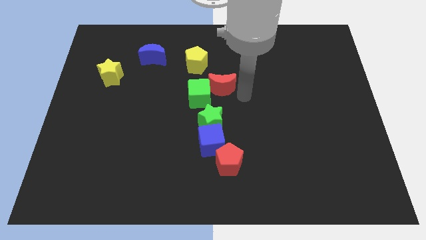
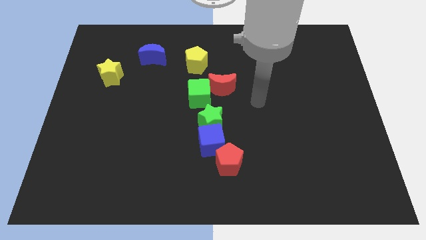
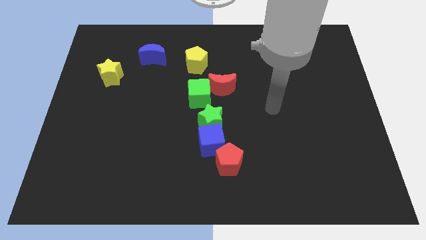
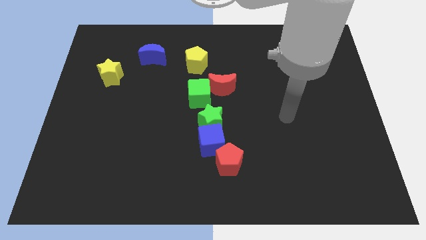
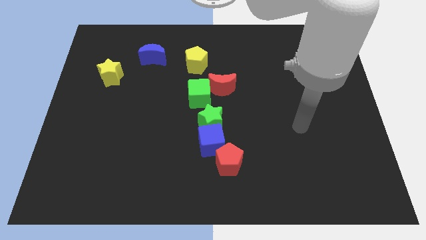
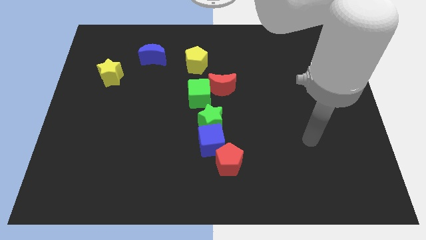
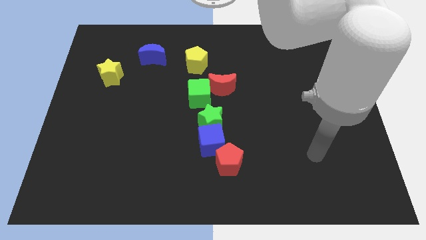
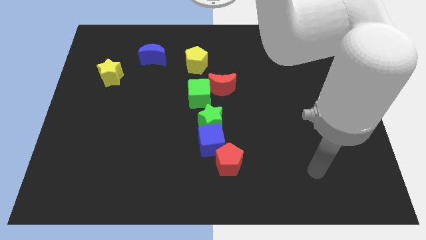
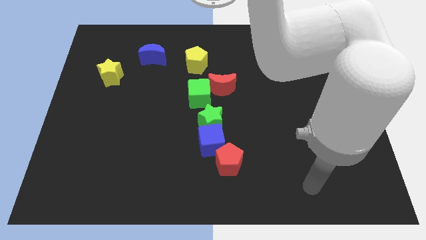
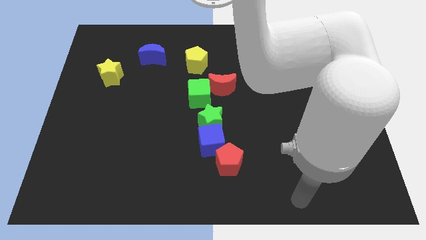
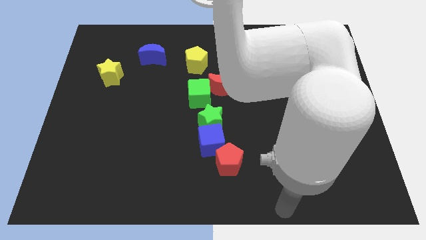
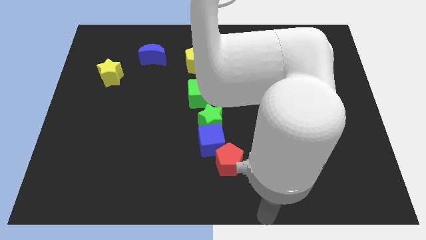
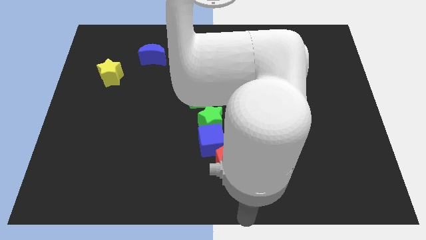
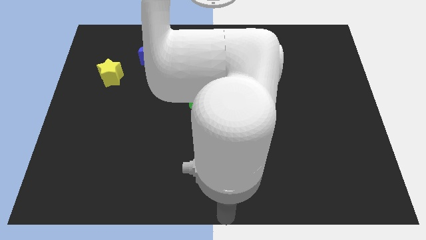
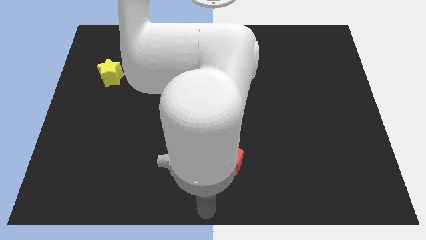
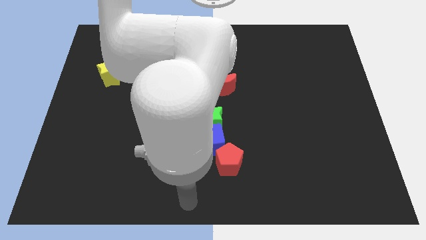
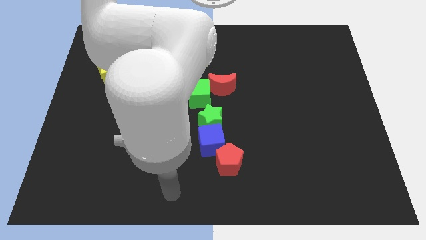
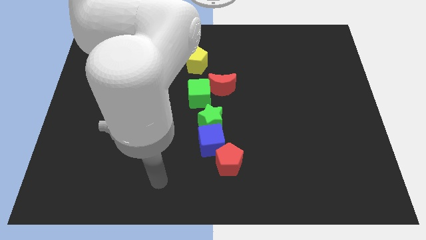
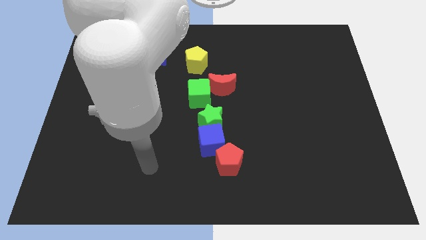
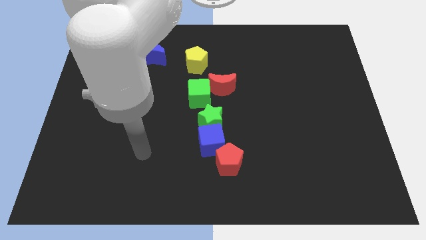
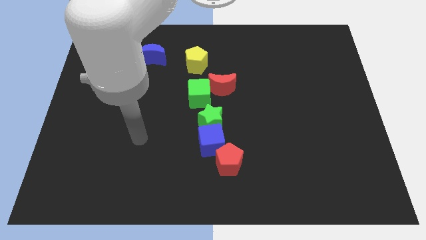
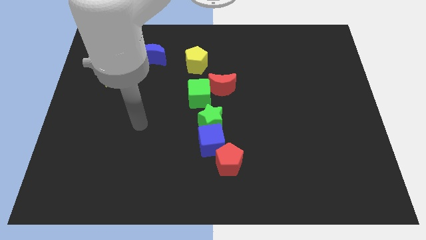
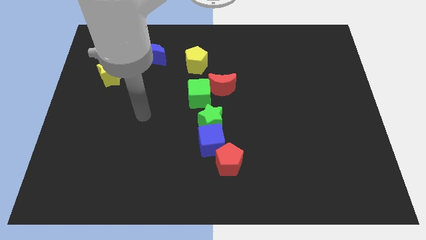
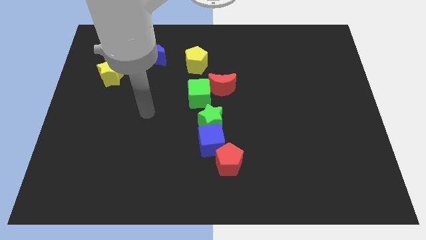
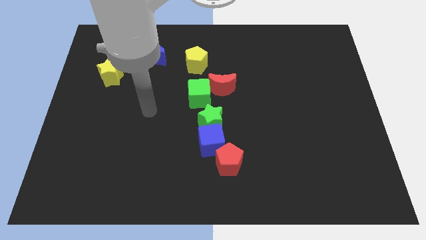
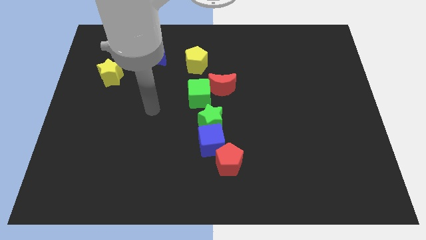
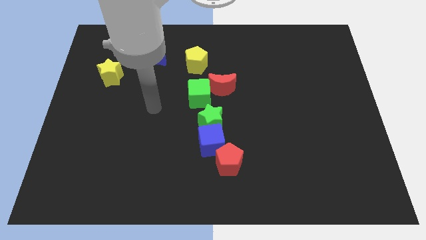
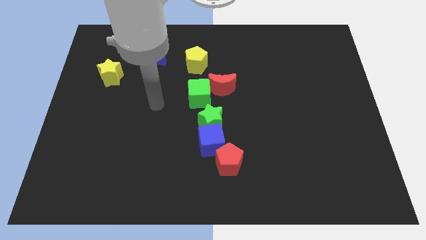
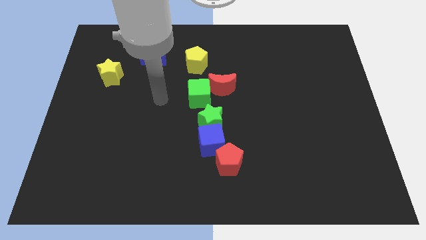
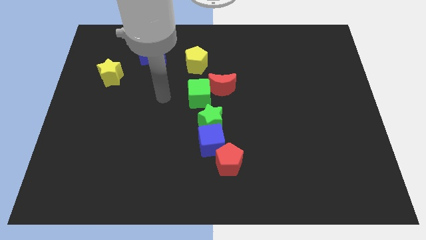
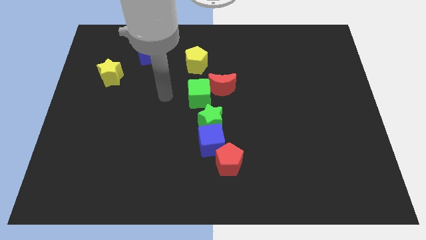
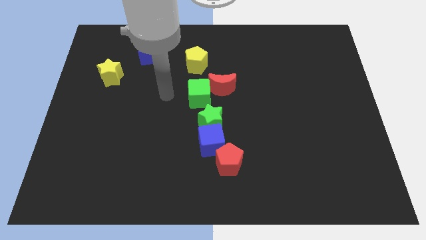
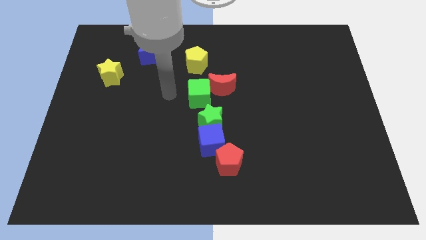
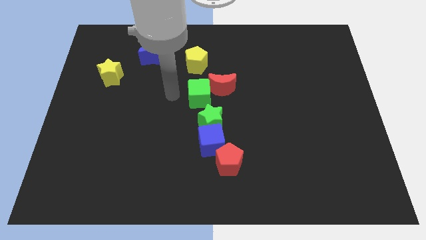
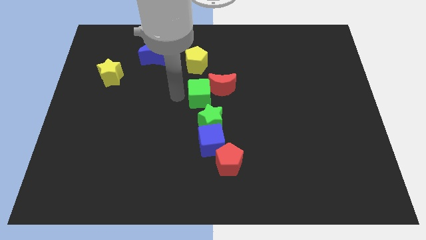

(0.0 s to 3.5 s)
move your hand towards the left of the green cube

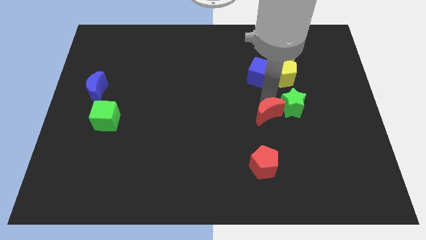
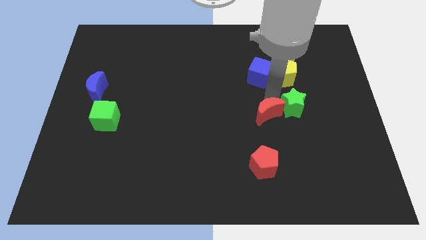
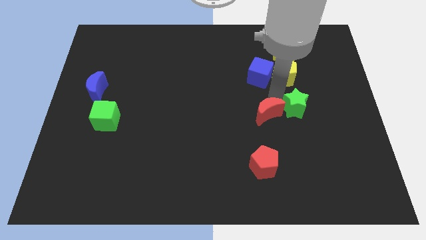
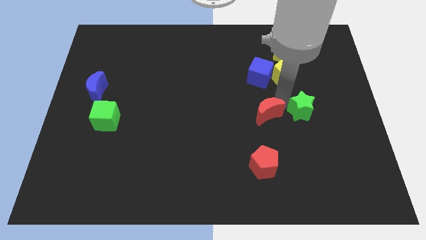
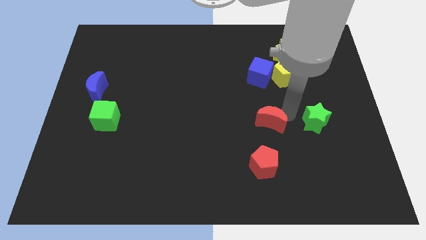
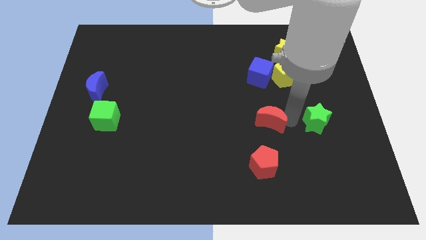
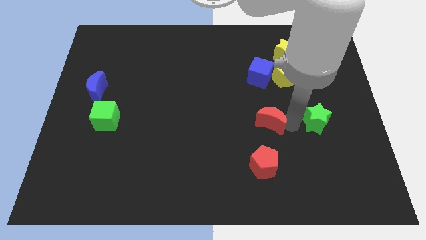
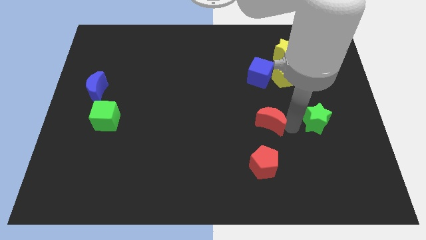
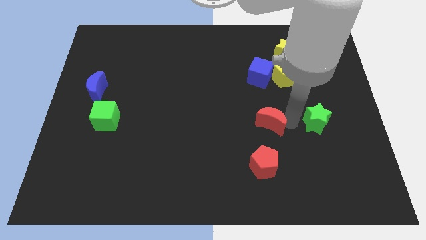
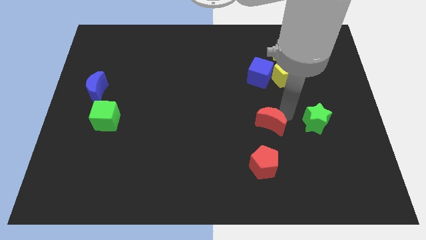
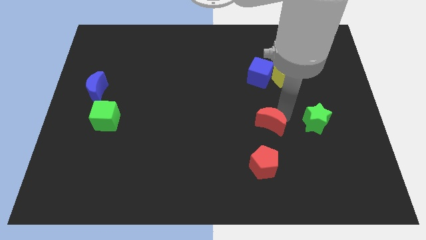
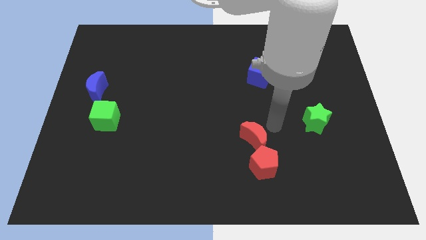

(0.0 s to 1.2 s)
separate the green star and red crescent

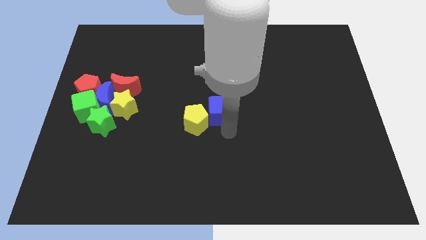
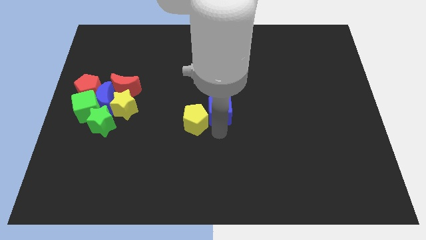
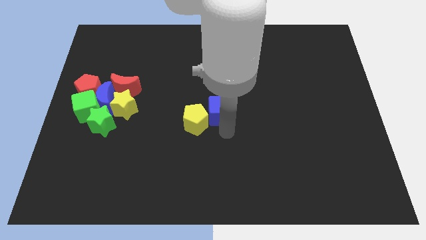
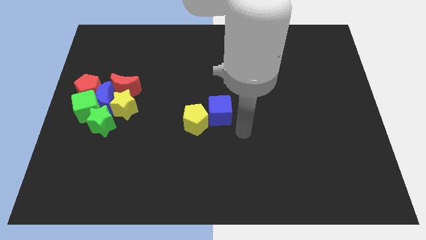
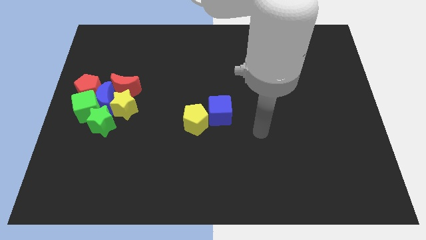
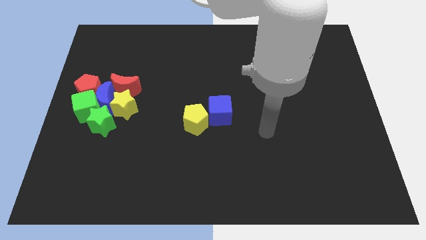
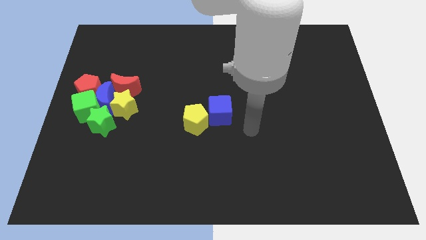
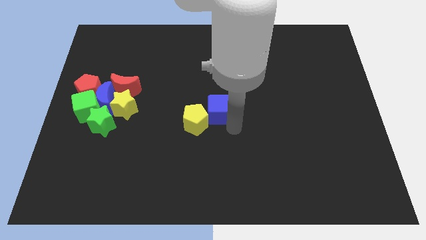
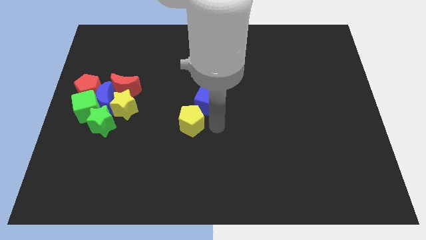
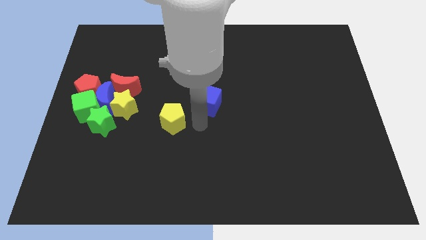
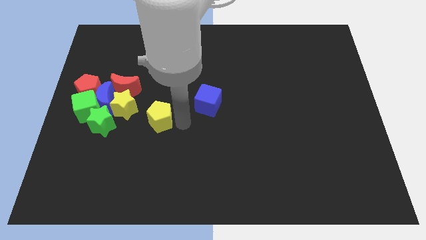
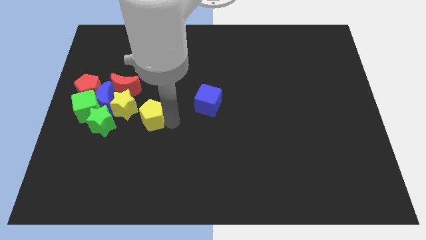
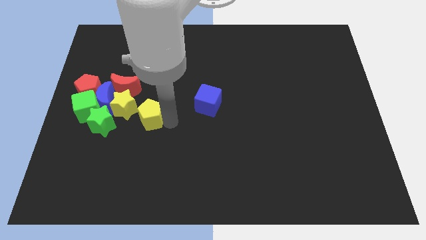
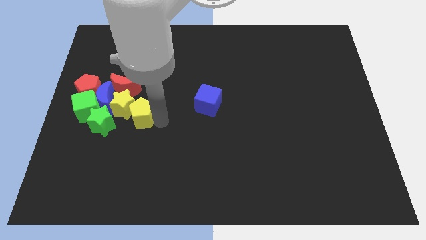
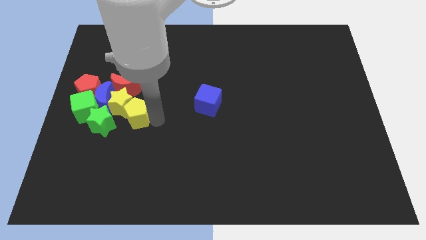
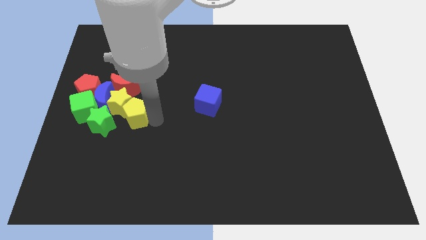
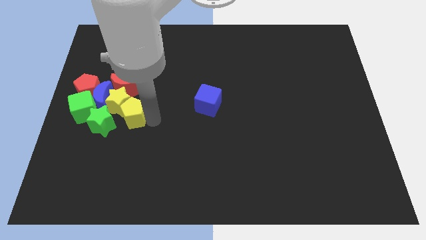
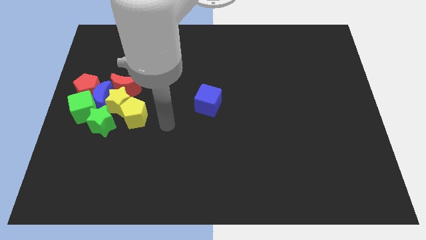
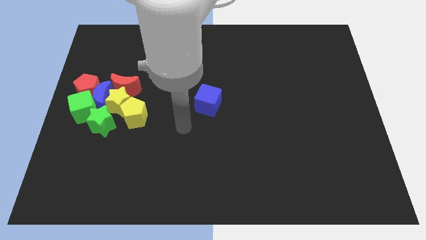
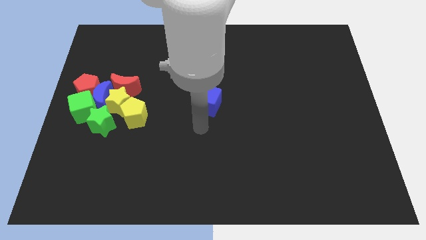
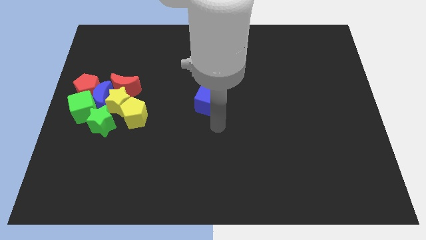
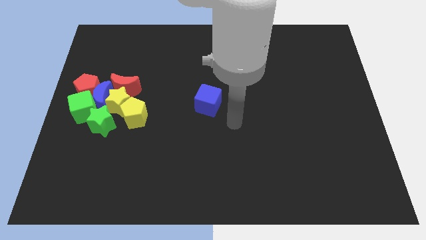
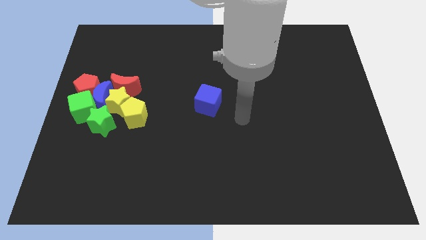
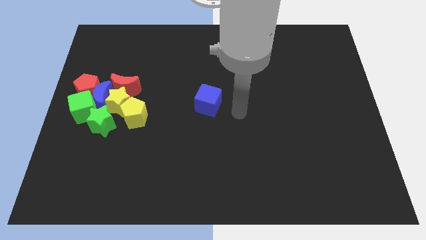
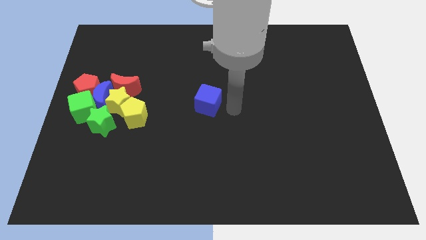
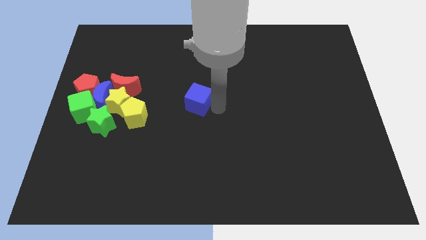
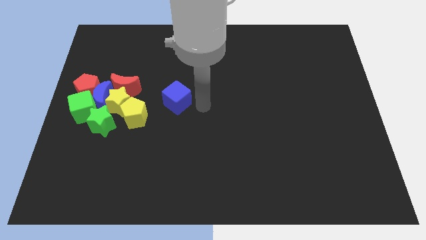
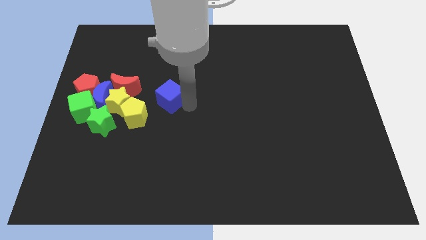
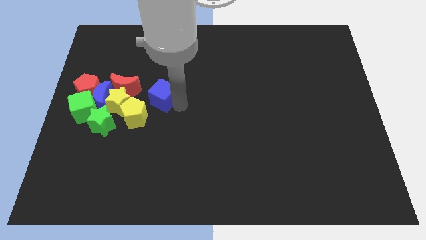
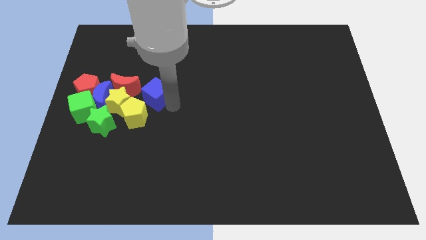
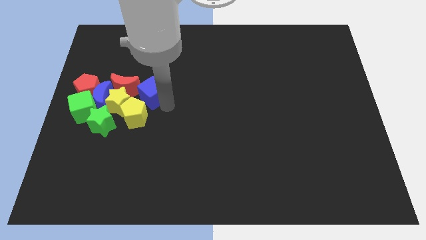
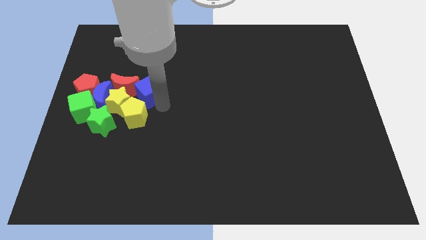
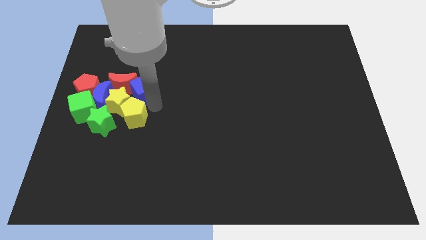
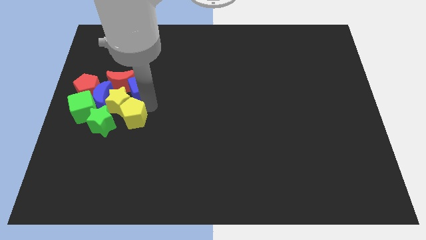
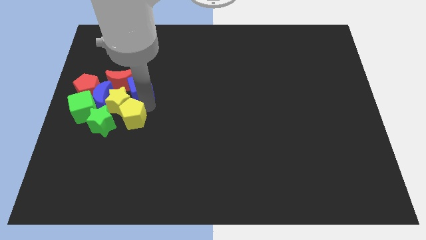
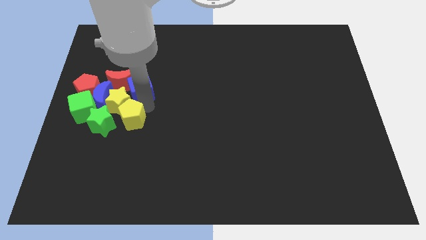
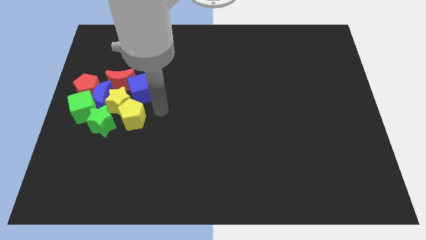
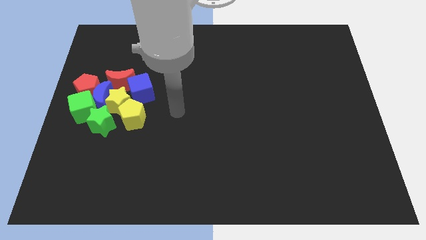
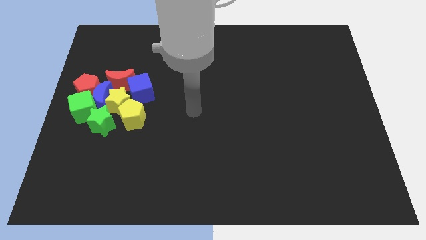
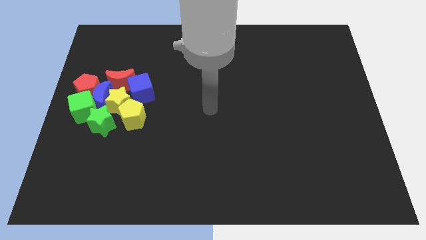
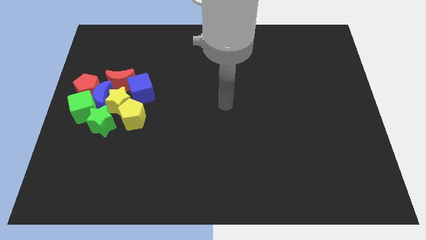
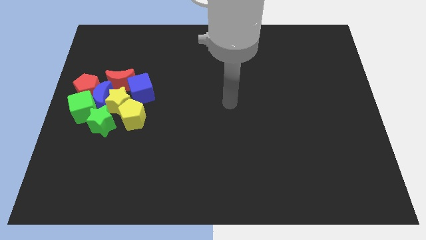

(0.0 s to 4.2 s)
move the yellow pentagon and the blue cube to the group of blocks

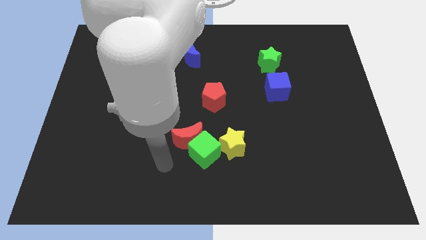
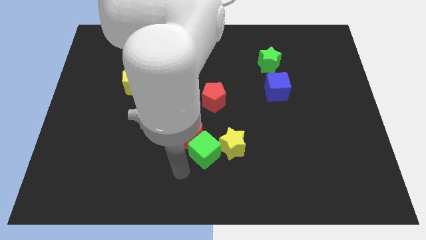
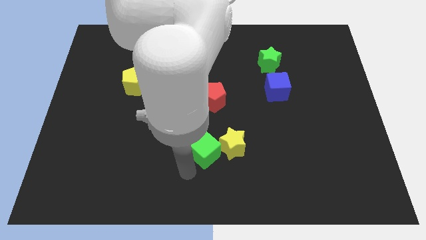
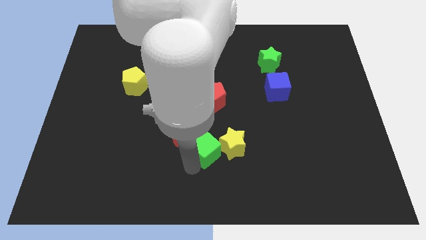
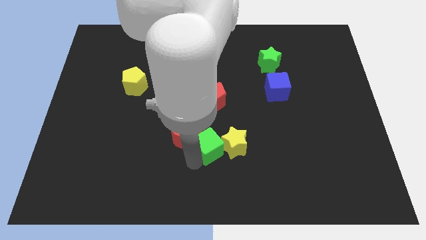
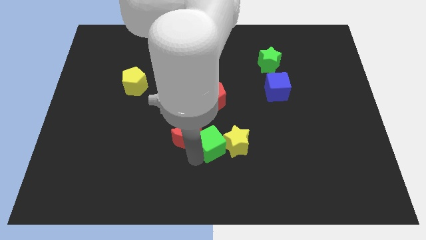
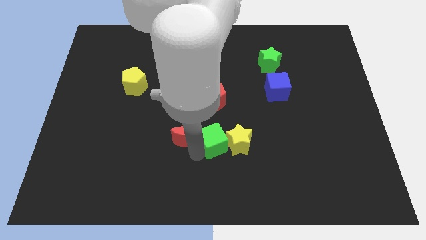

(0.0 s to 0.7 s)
move the green cube slightly to the yellow star
